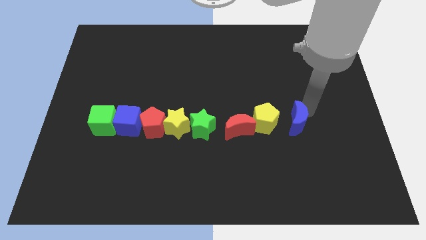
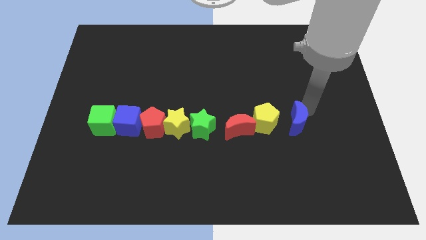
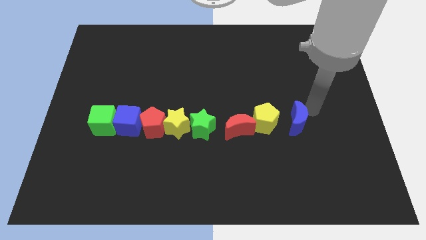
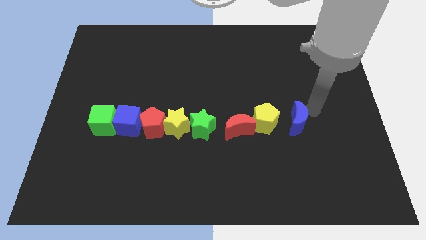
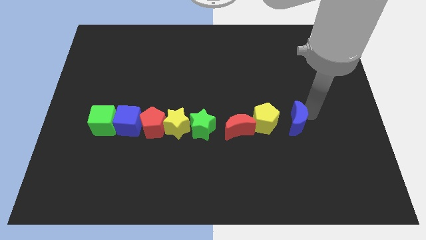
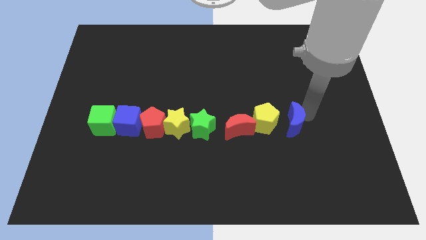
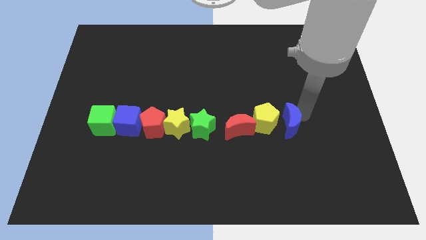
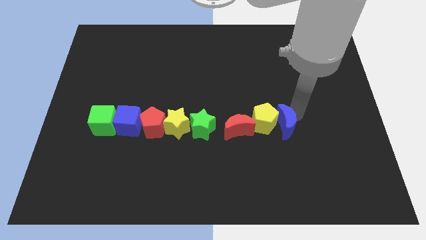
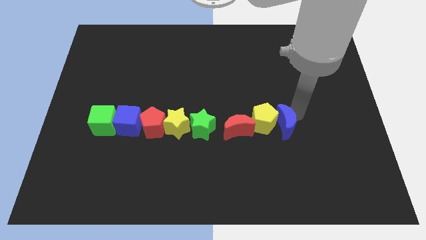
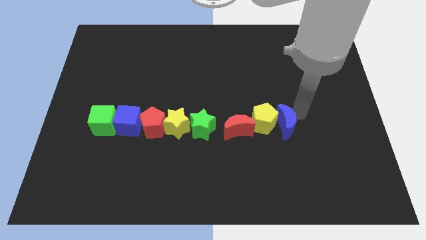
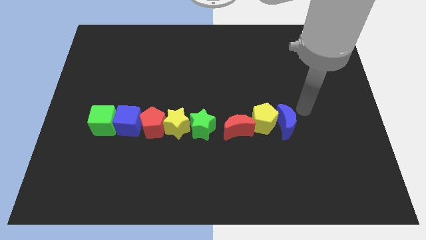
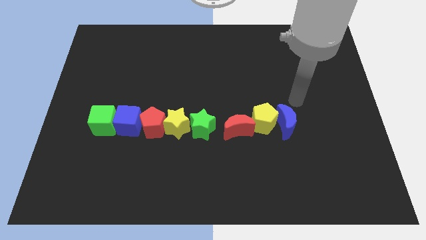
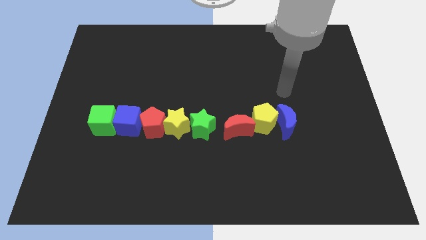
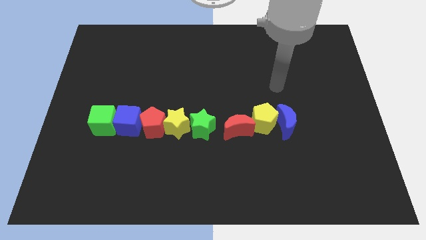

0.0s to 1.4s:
adjust the blue crescent to form a line with other blocks

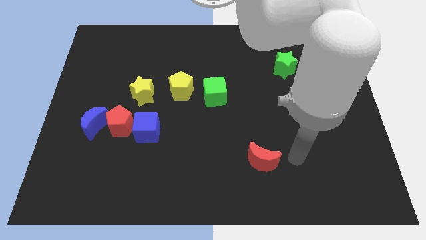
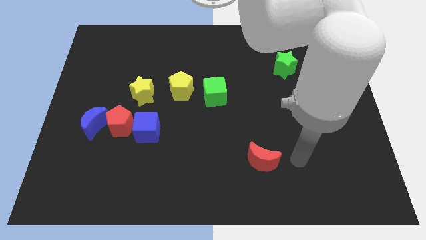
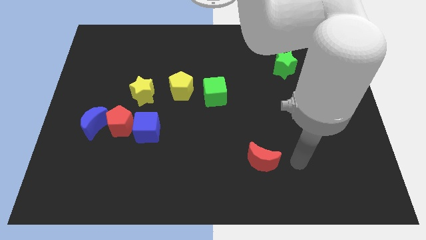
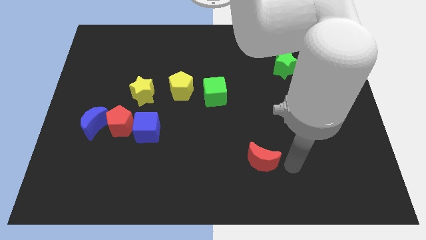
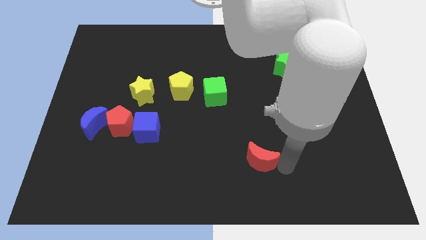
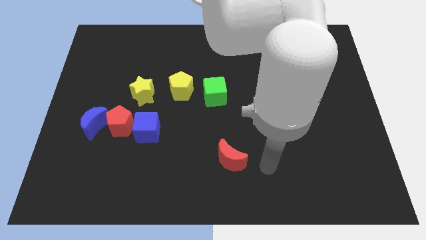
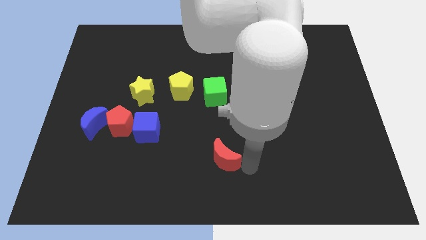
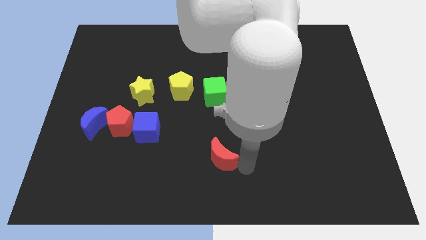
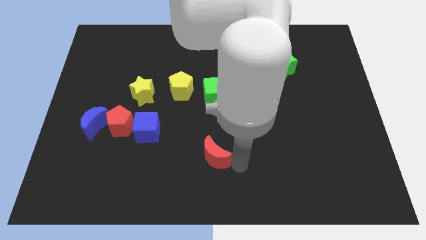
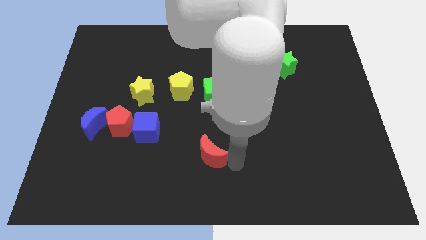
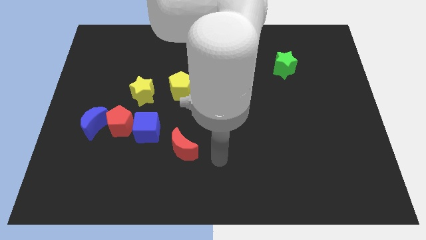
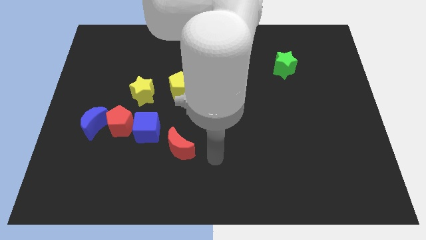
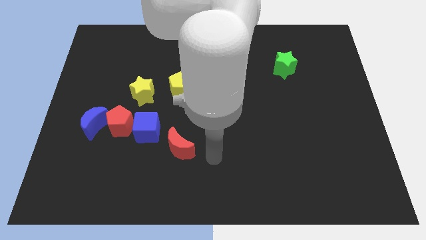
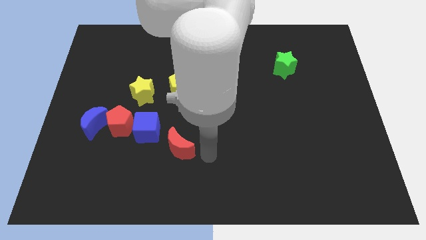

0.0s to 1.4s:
drag the red moon to the left

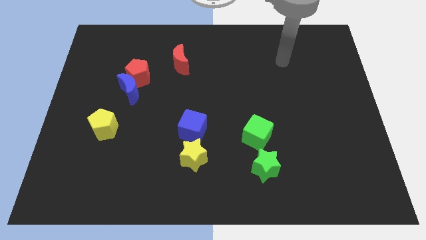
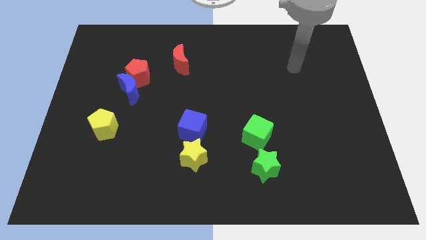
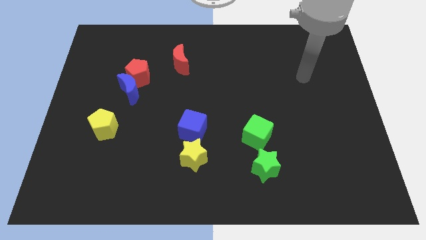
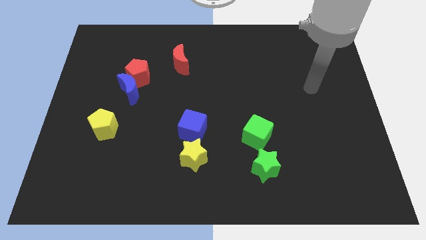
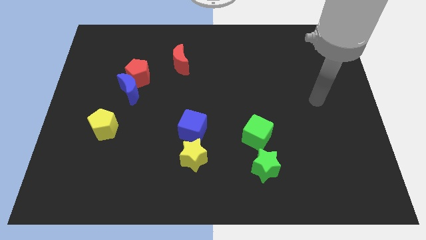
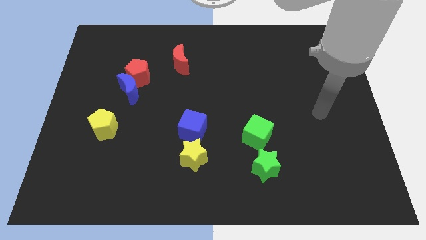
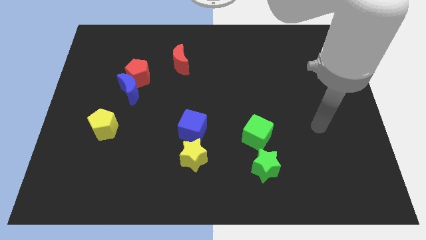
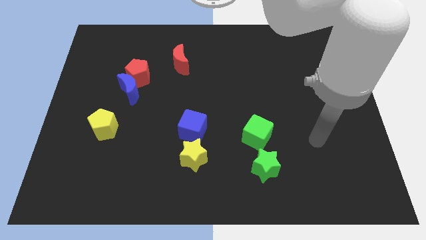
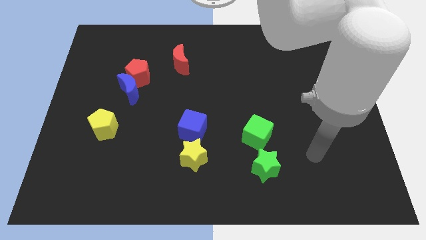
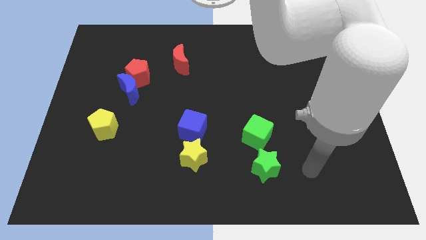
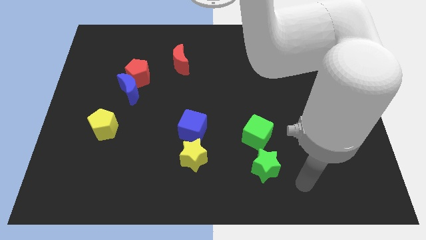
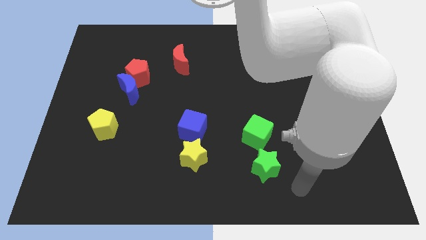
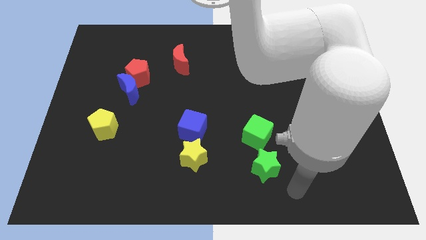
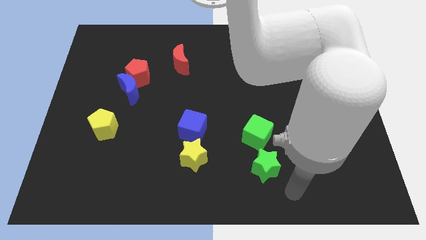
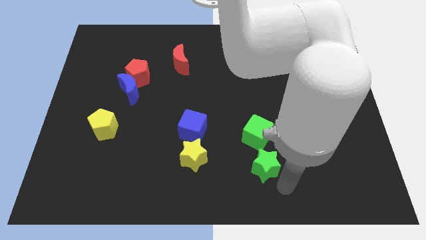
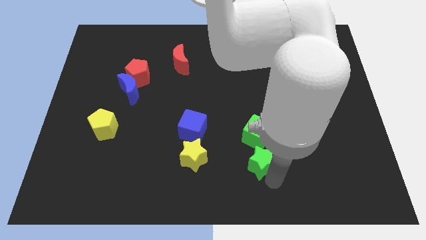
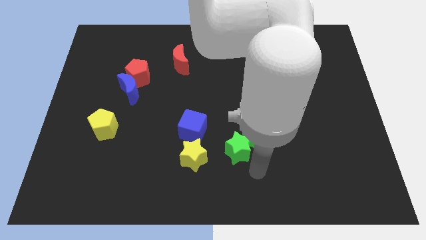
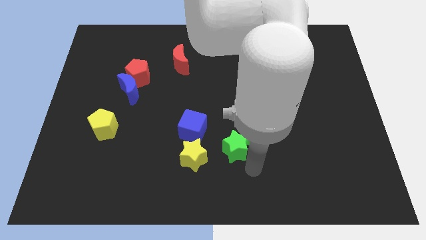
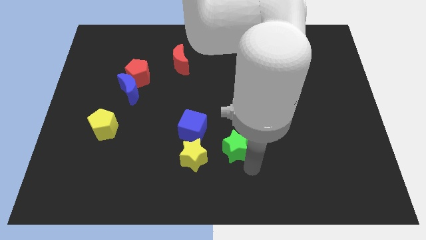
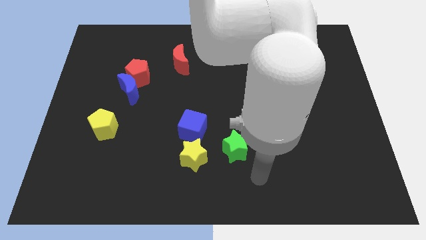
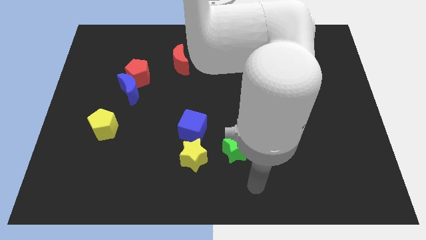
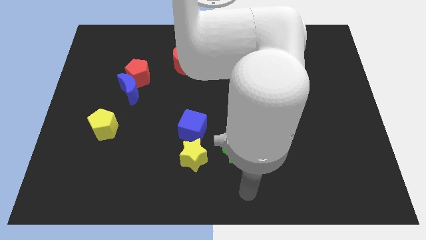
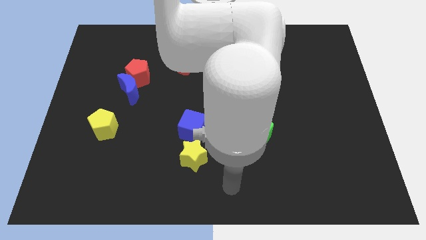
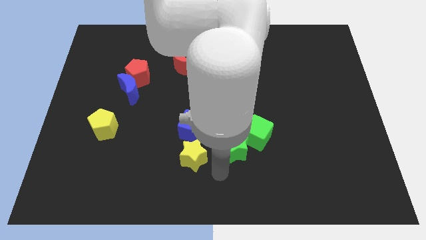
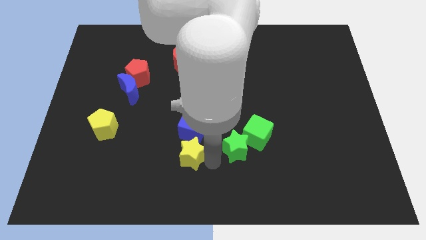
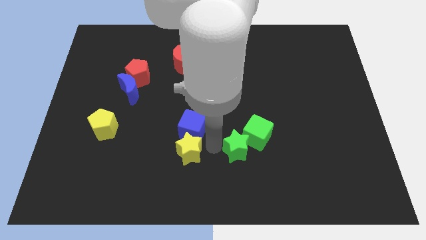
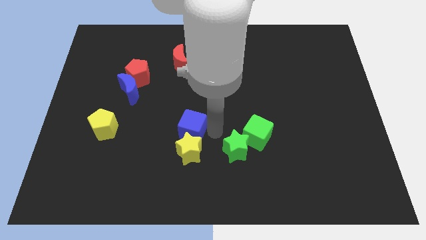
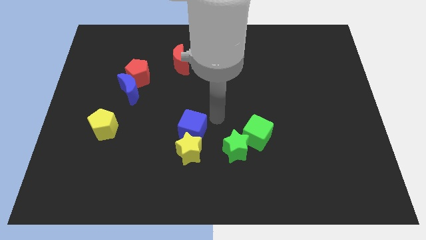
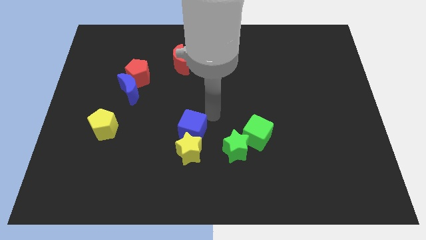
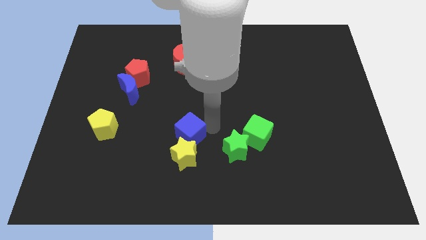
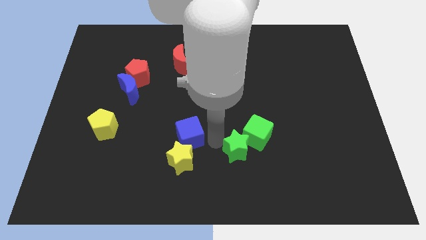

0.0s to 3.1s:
move the stars slightly to the top side

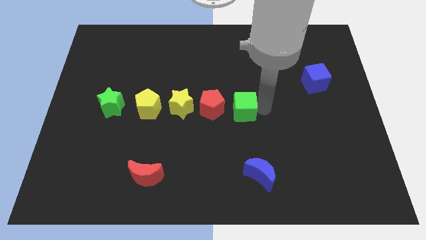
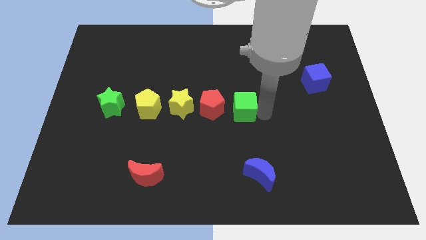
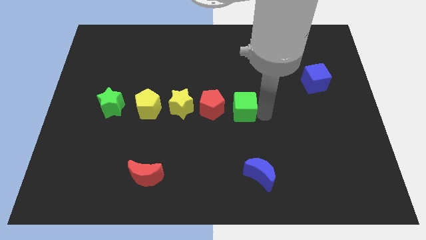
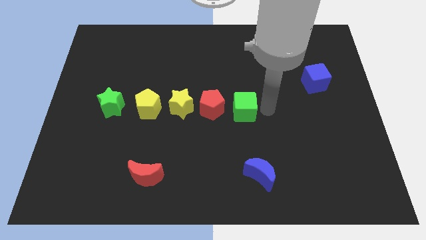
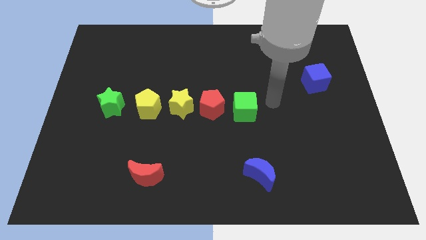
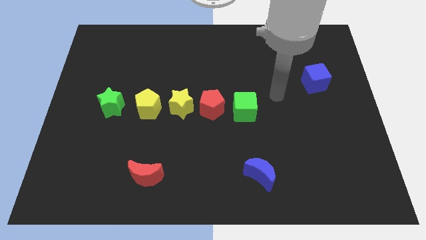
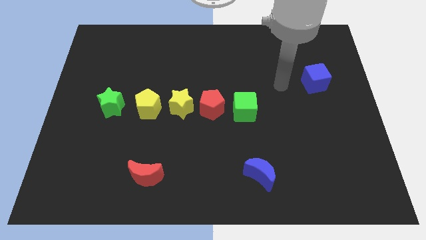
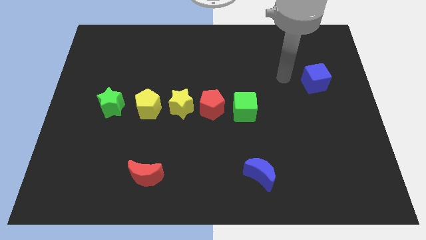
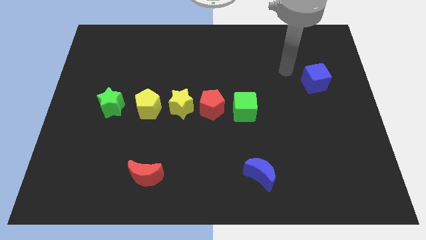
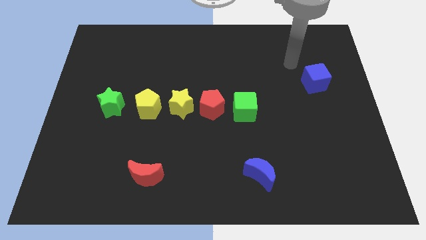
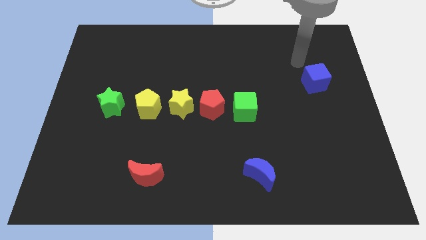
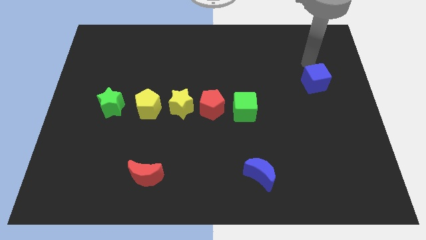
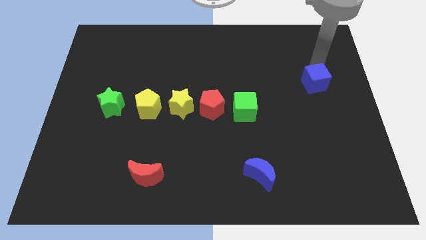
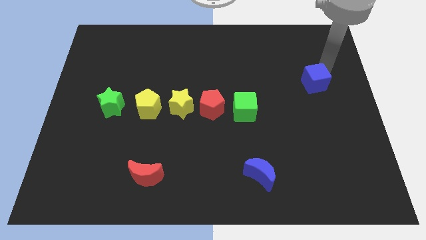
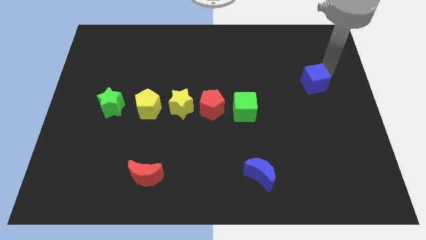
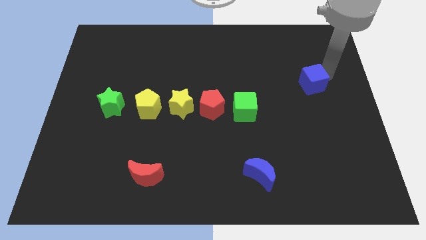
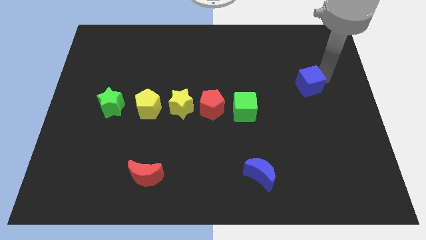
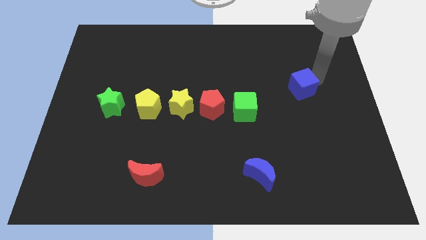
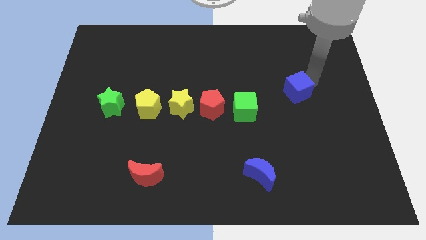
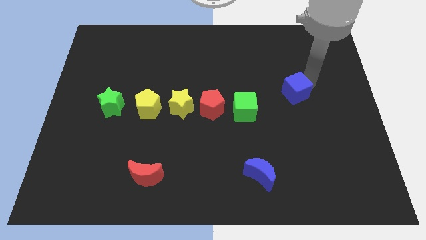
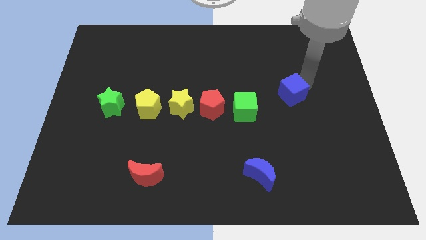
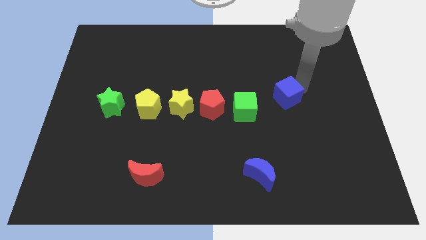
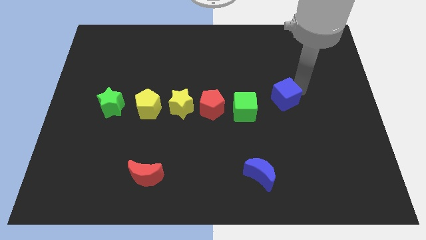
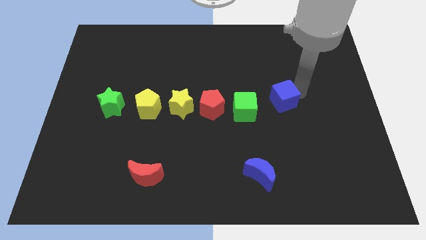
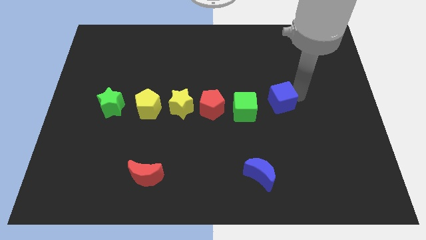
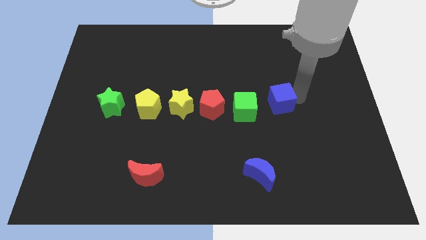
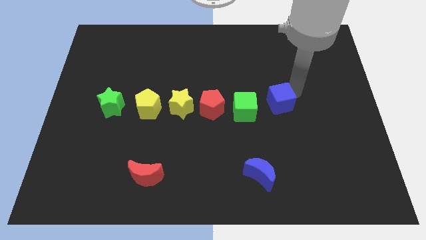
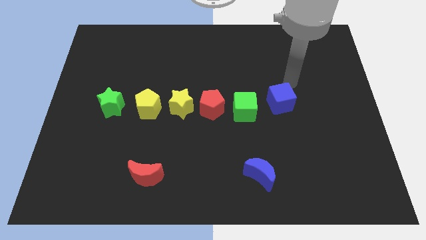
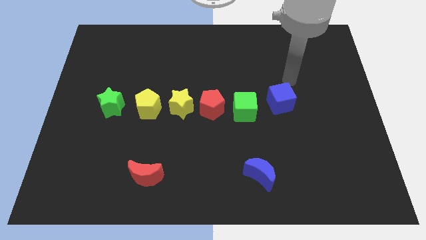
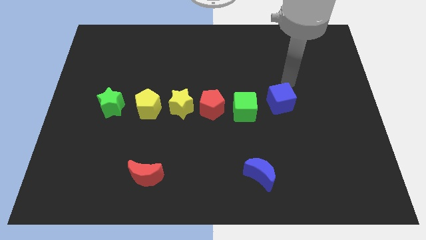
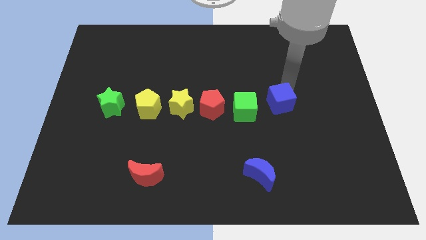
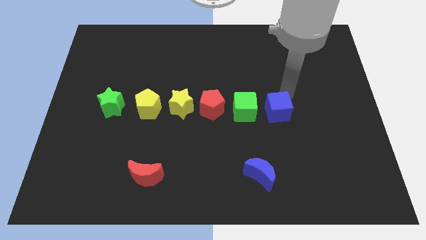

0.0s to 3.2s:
adjust the blue cube on the right side of the green cube
